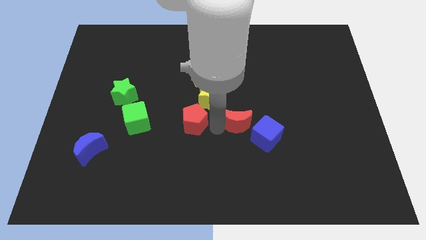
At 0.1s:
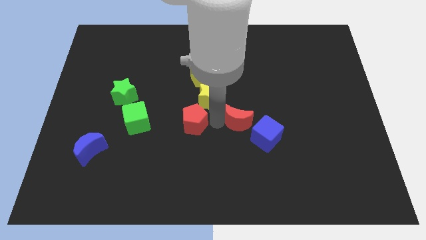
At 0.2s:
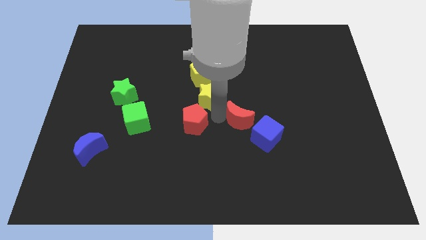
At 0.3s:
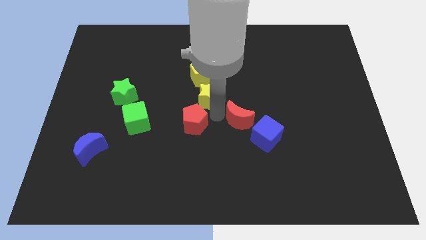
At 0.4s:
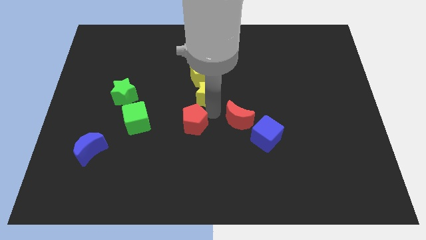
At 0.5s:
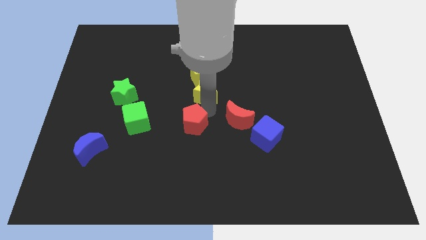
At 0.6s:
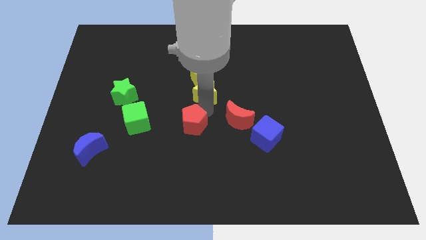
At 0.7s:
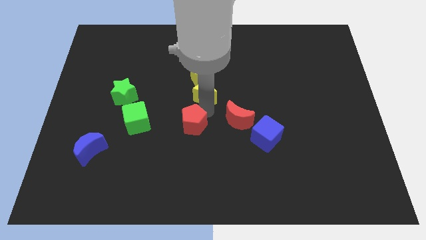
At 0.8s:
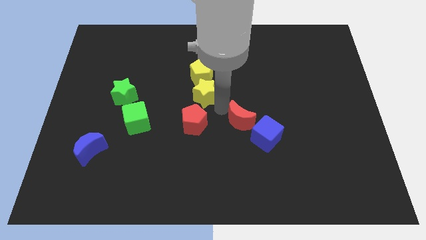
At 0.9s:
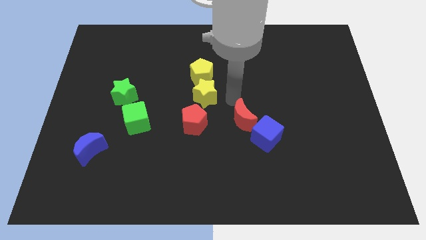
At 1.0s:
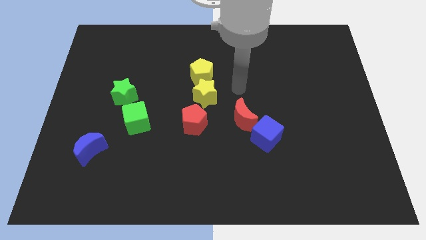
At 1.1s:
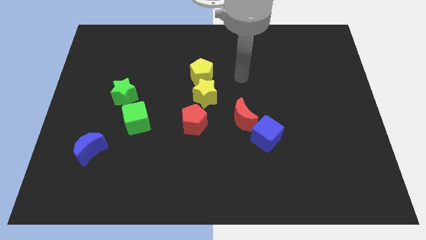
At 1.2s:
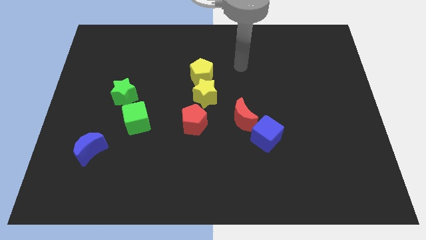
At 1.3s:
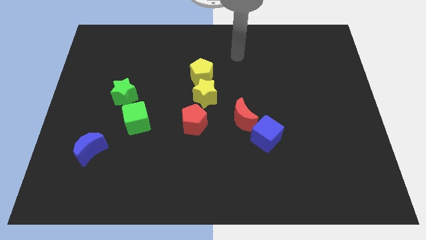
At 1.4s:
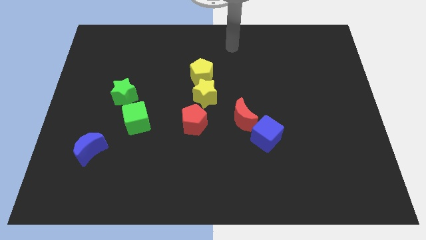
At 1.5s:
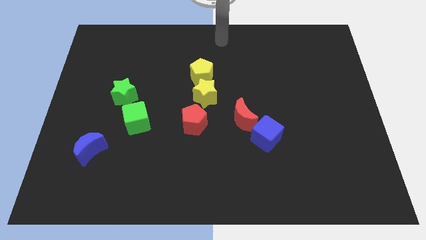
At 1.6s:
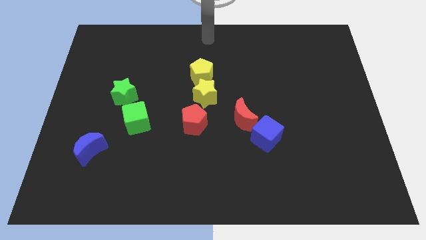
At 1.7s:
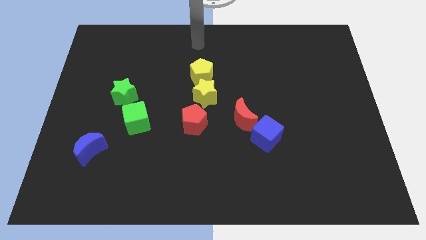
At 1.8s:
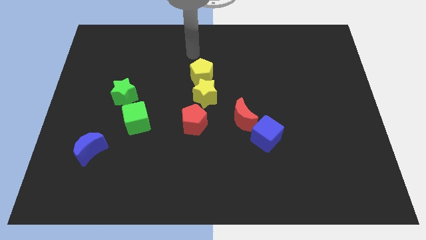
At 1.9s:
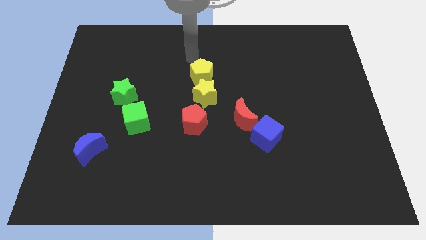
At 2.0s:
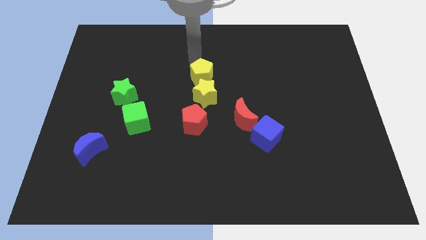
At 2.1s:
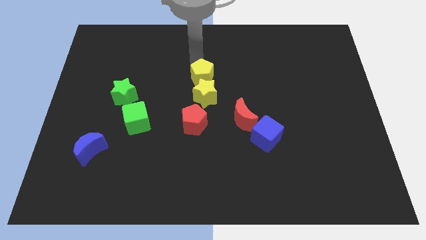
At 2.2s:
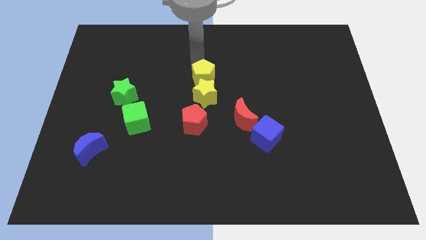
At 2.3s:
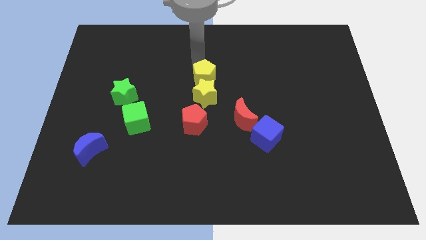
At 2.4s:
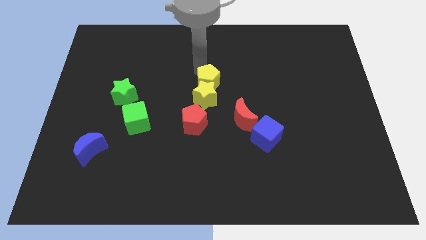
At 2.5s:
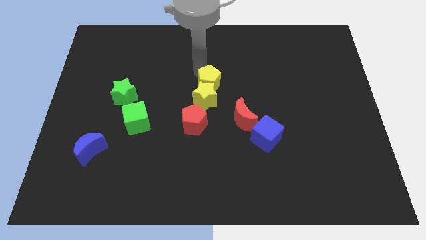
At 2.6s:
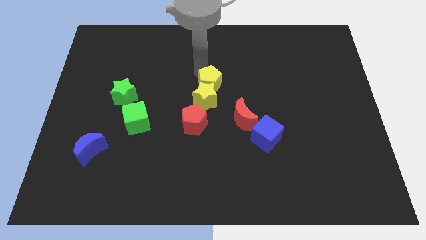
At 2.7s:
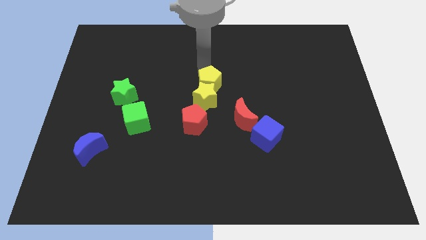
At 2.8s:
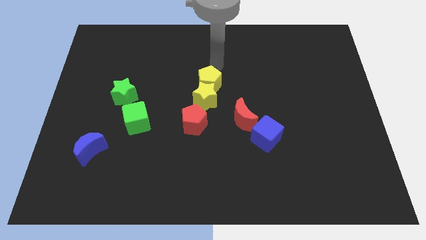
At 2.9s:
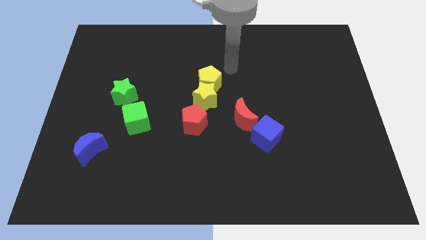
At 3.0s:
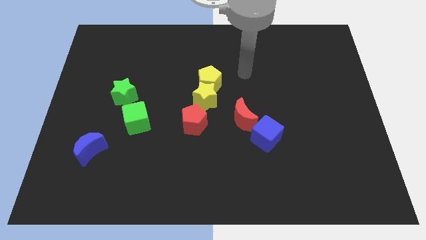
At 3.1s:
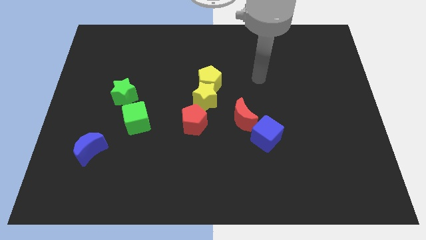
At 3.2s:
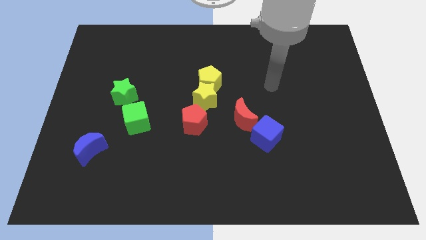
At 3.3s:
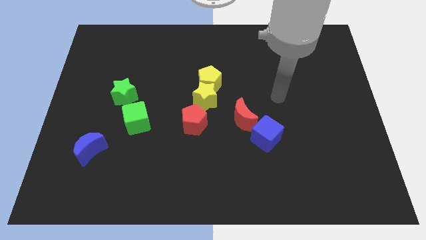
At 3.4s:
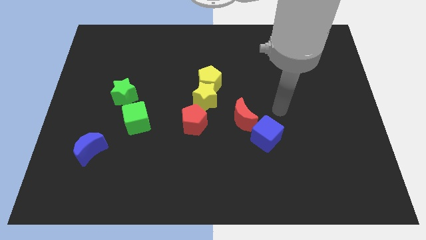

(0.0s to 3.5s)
adjust the yellow blocks towards the center

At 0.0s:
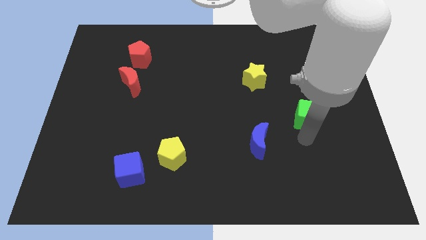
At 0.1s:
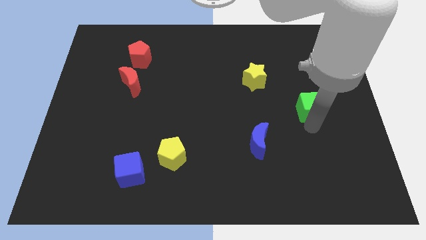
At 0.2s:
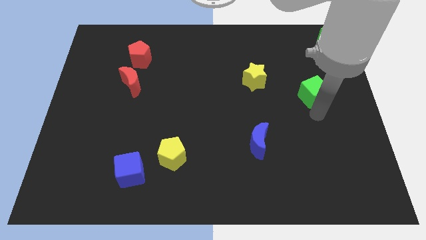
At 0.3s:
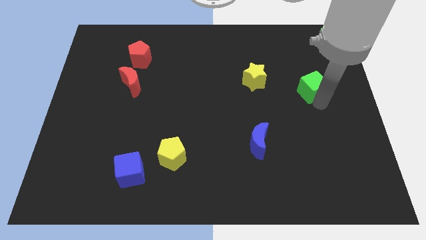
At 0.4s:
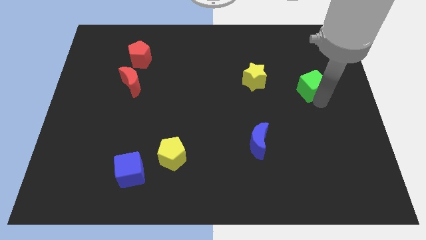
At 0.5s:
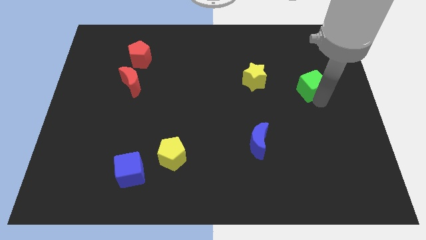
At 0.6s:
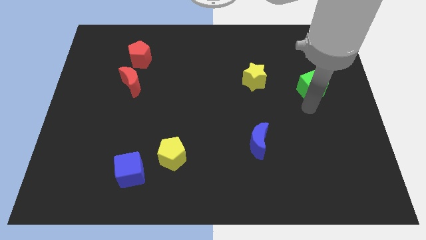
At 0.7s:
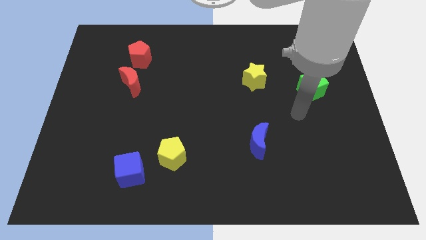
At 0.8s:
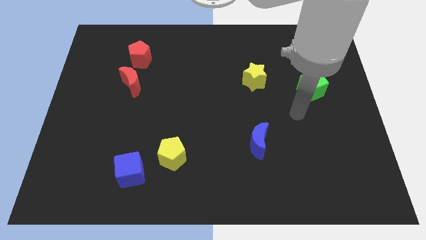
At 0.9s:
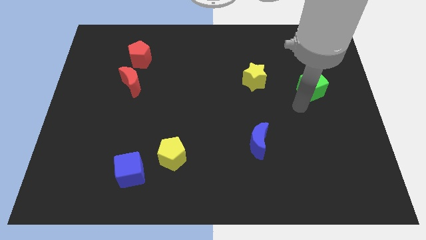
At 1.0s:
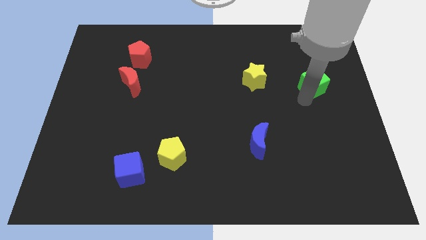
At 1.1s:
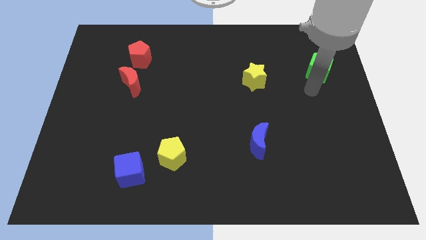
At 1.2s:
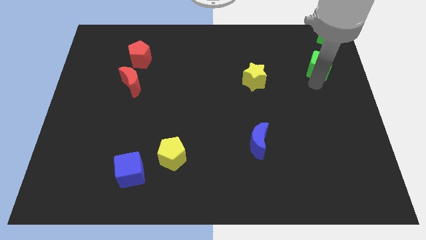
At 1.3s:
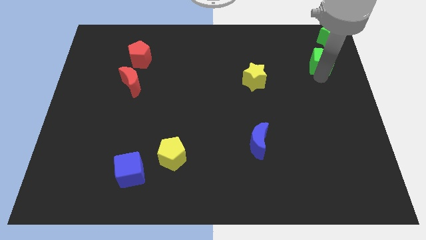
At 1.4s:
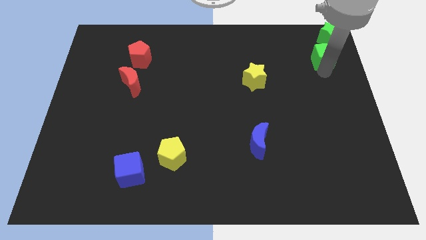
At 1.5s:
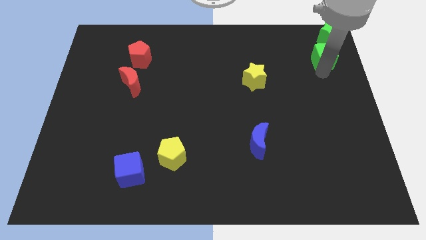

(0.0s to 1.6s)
move the green cube to the bottom of the green star

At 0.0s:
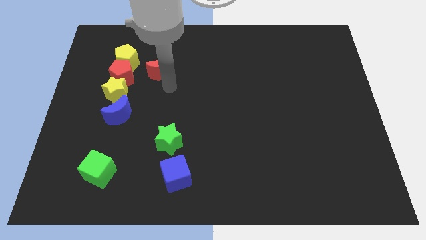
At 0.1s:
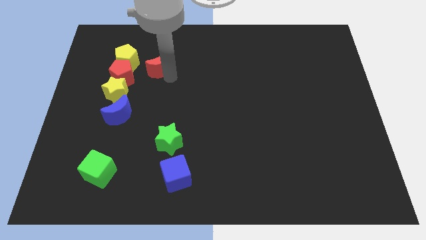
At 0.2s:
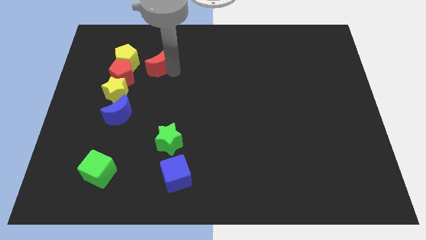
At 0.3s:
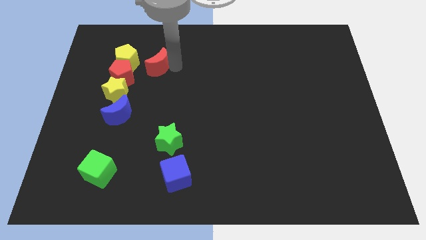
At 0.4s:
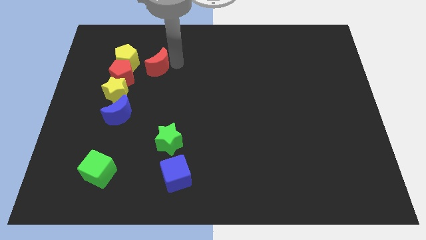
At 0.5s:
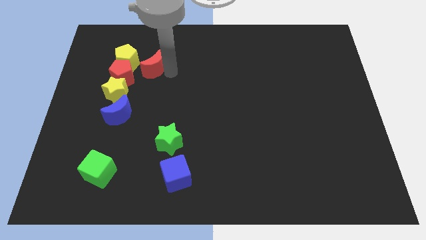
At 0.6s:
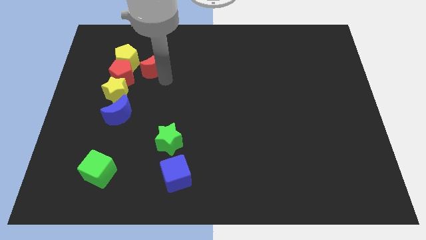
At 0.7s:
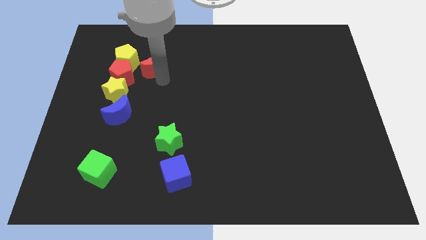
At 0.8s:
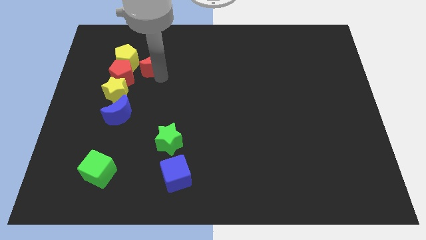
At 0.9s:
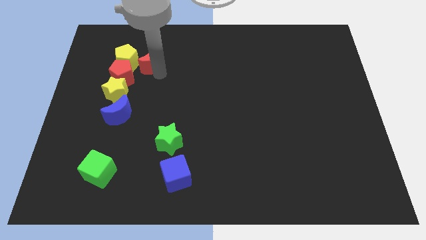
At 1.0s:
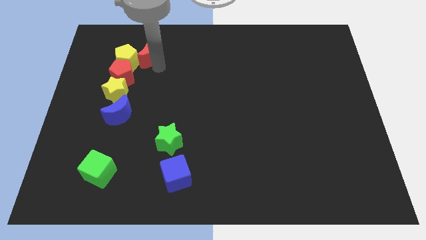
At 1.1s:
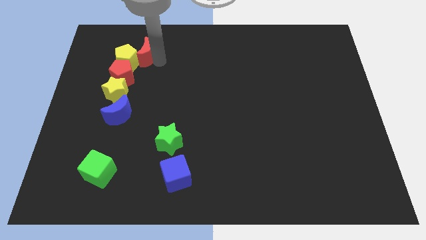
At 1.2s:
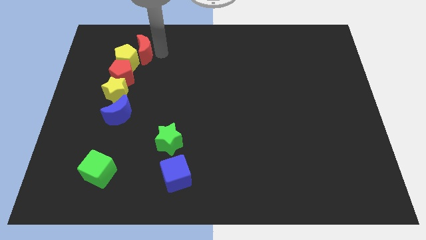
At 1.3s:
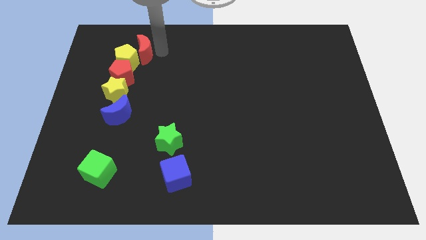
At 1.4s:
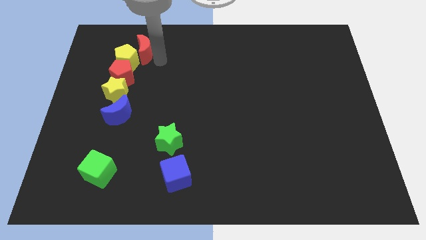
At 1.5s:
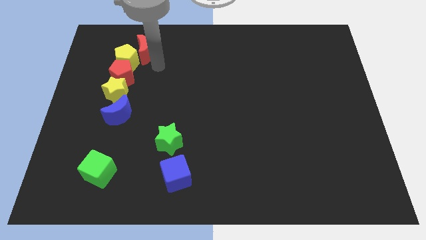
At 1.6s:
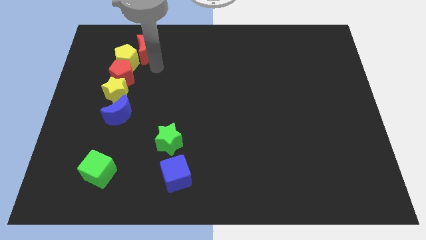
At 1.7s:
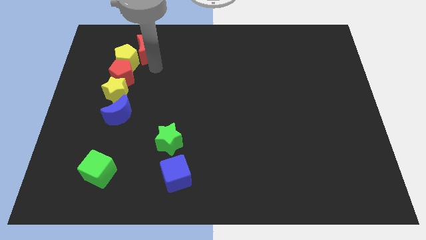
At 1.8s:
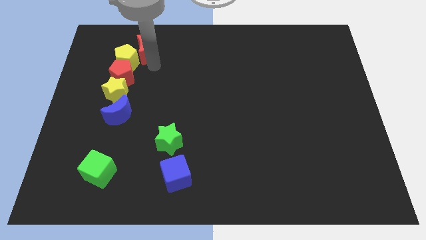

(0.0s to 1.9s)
move the red moon into the yellow pentagon

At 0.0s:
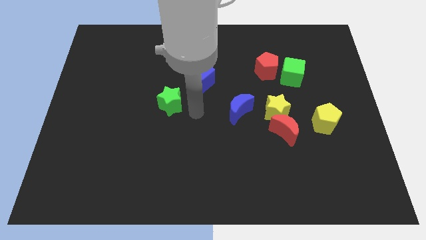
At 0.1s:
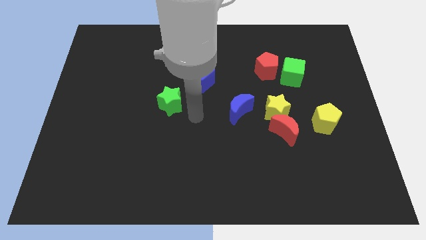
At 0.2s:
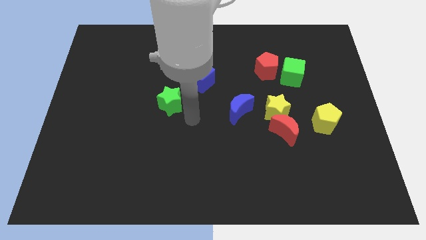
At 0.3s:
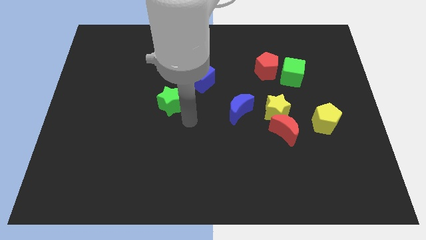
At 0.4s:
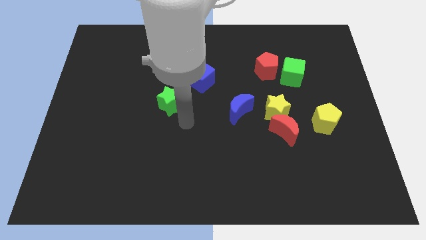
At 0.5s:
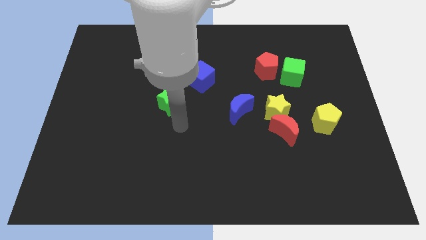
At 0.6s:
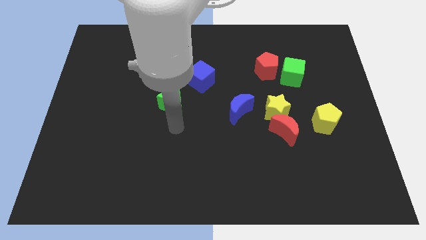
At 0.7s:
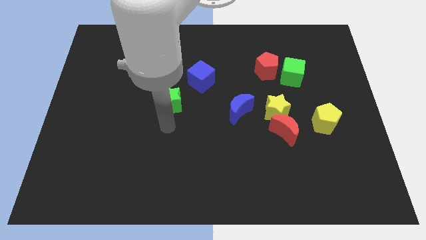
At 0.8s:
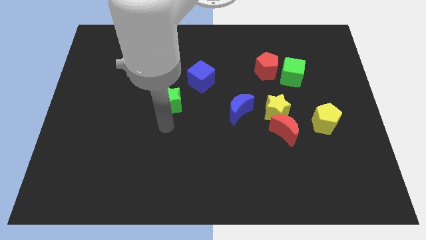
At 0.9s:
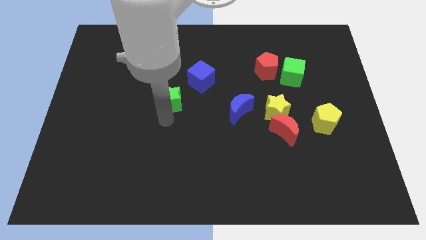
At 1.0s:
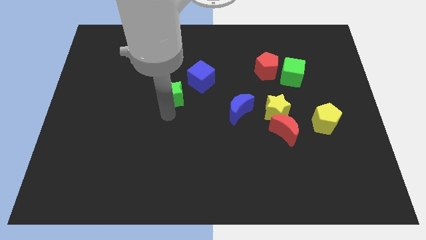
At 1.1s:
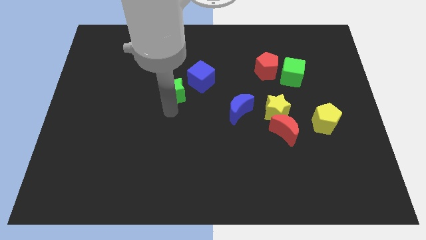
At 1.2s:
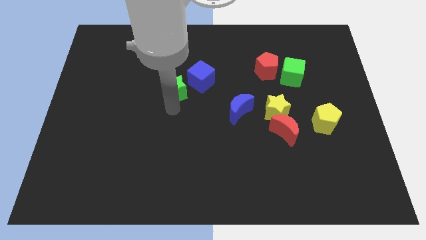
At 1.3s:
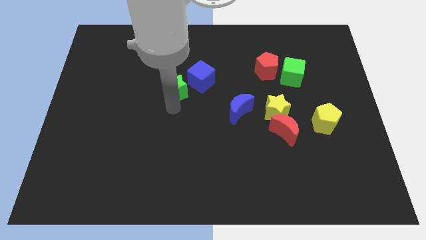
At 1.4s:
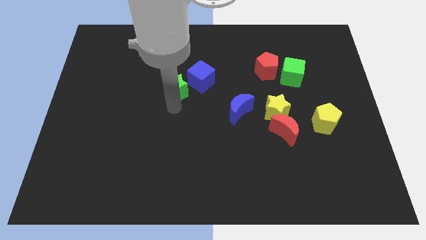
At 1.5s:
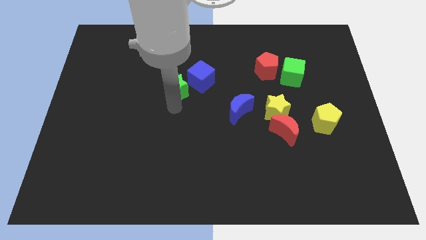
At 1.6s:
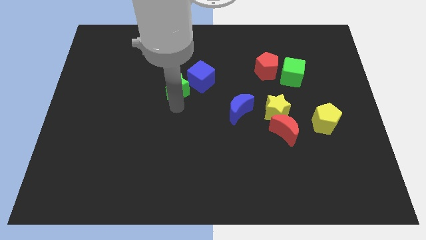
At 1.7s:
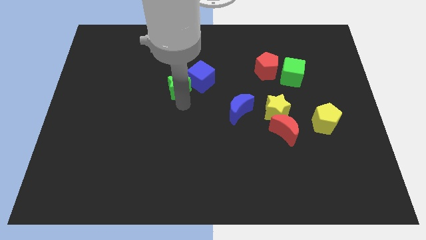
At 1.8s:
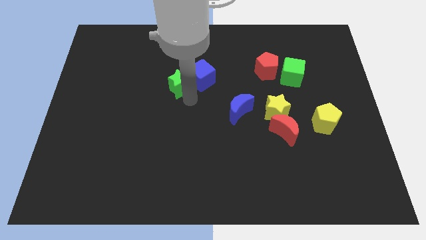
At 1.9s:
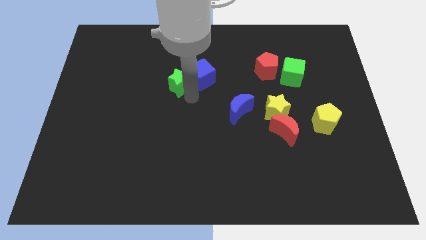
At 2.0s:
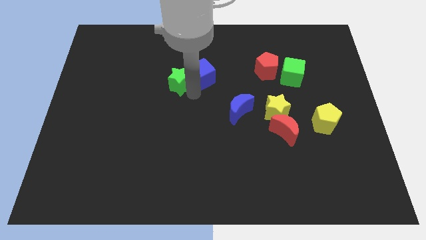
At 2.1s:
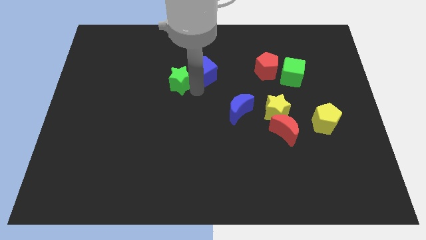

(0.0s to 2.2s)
slide the green star to the left of the blue cube
